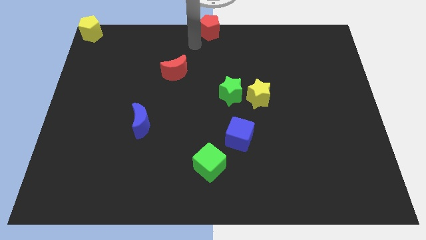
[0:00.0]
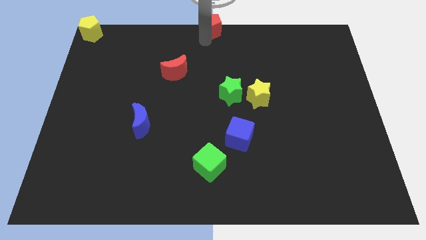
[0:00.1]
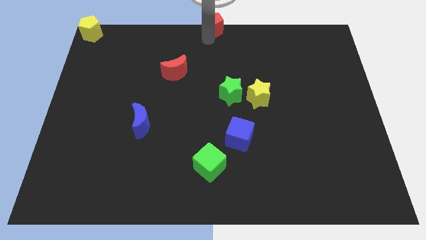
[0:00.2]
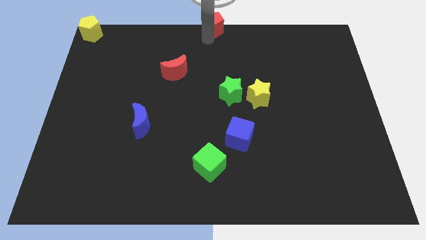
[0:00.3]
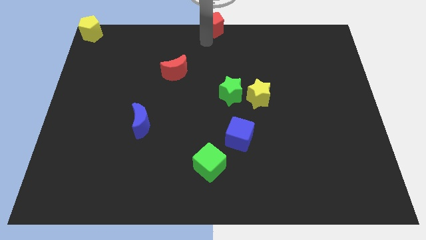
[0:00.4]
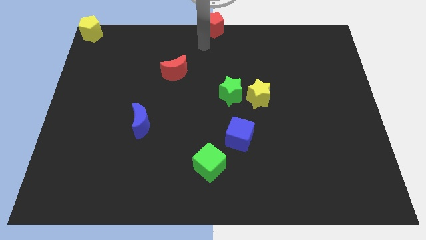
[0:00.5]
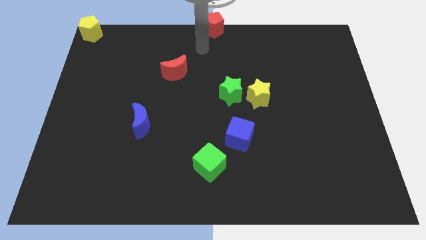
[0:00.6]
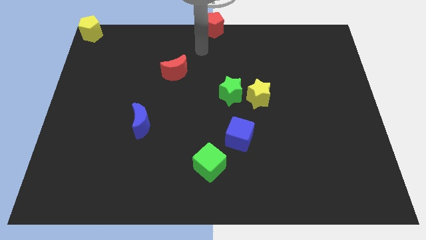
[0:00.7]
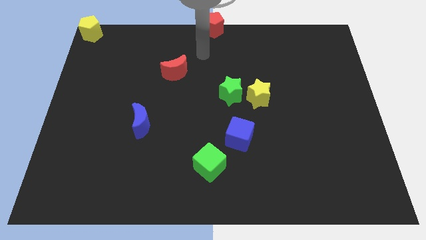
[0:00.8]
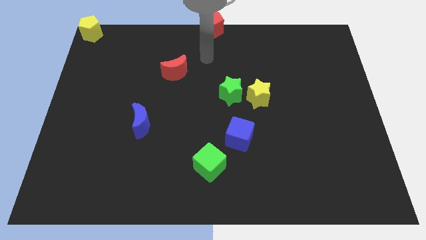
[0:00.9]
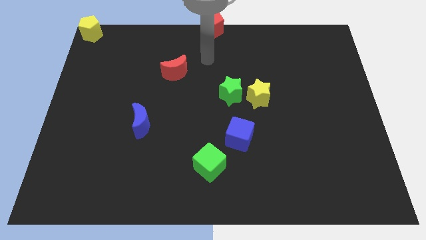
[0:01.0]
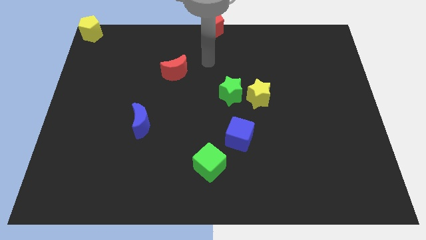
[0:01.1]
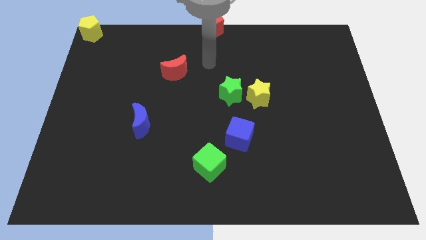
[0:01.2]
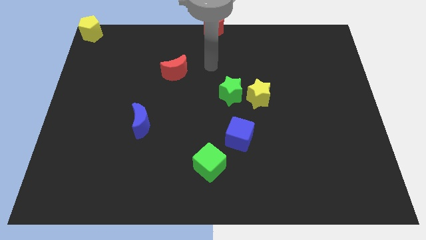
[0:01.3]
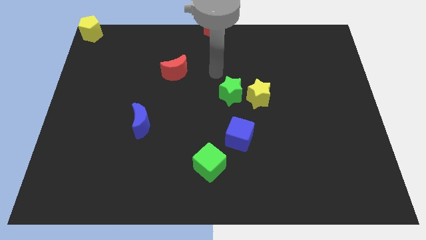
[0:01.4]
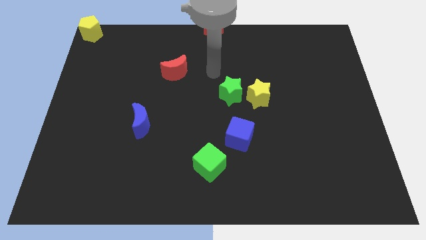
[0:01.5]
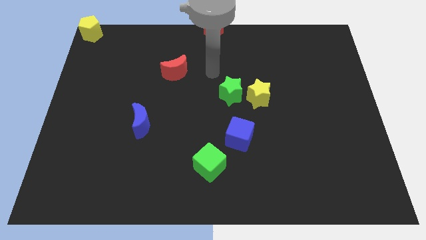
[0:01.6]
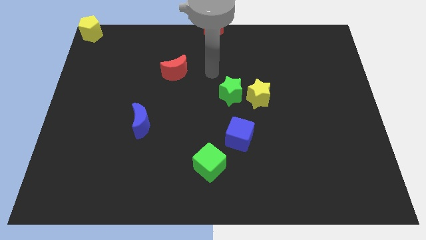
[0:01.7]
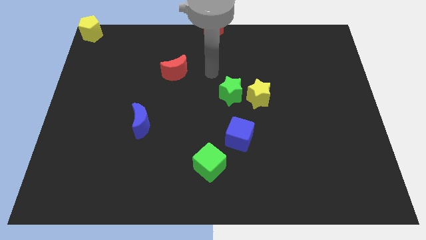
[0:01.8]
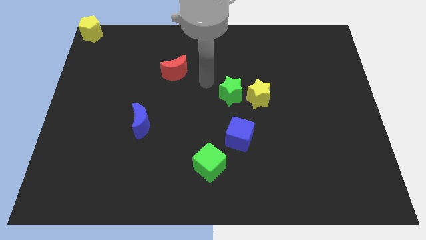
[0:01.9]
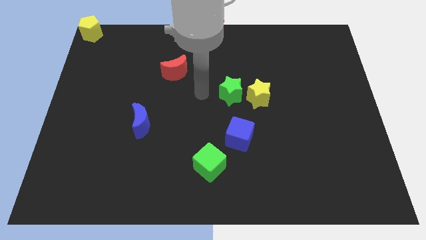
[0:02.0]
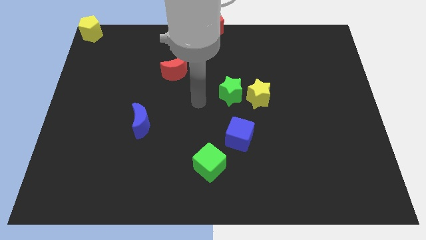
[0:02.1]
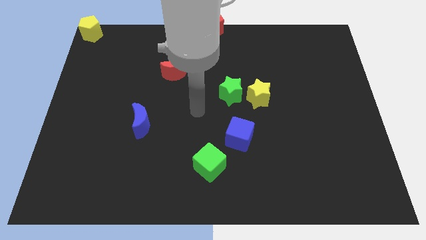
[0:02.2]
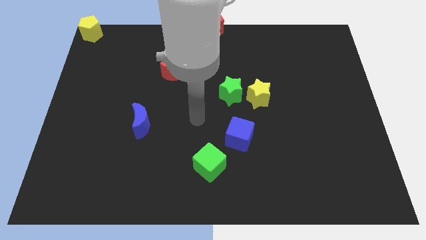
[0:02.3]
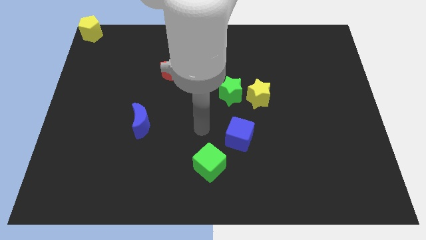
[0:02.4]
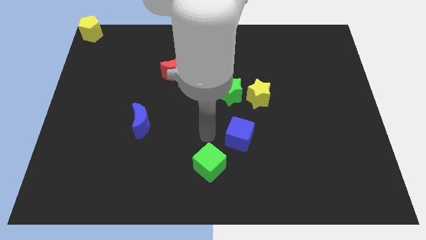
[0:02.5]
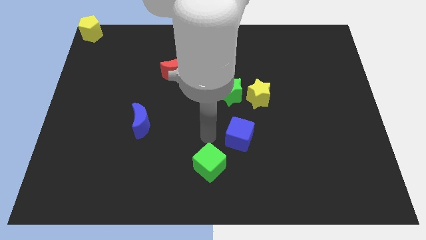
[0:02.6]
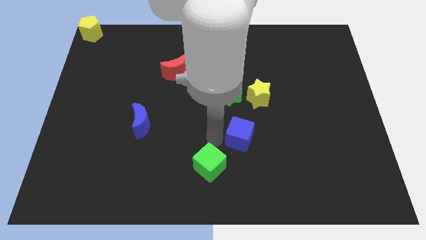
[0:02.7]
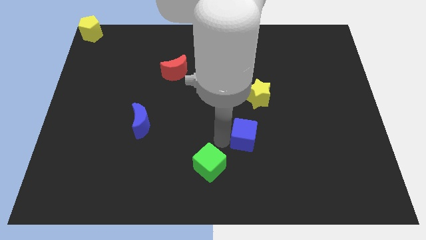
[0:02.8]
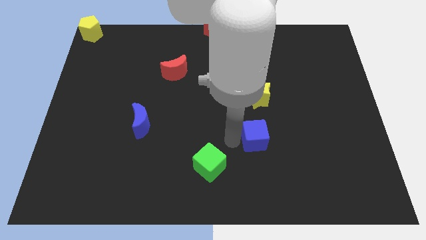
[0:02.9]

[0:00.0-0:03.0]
place blue cube to the bottom of yellow star

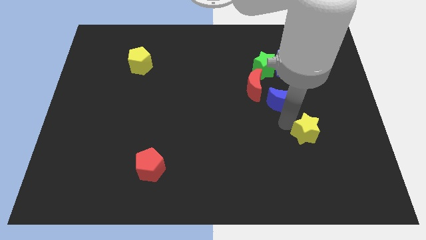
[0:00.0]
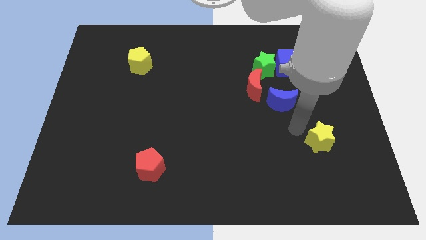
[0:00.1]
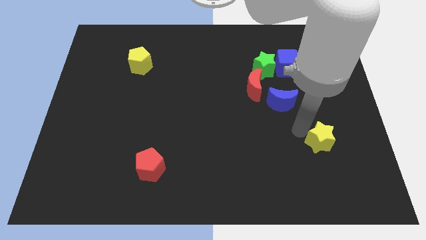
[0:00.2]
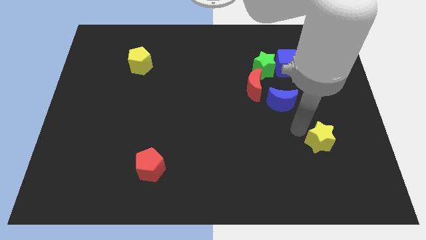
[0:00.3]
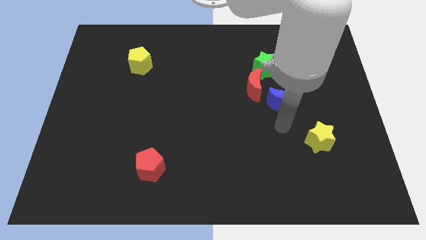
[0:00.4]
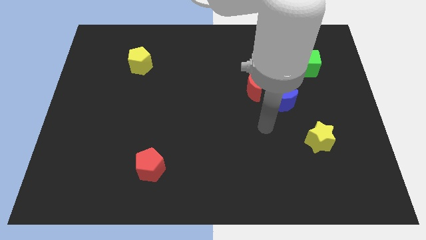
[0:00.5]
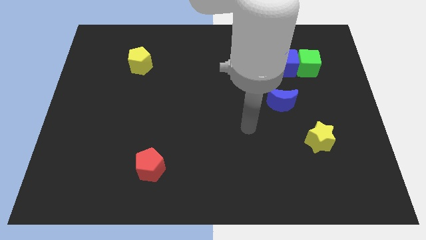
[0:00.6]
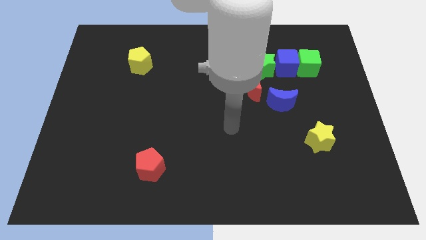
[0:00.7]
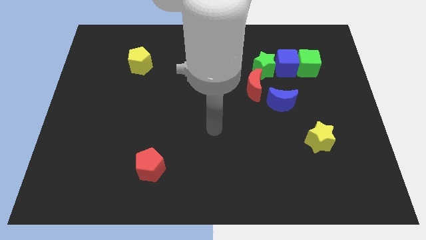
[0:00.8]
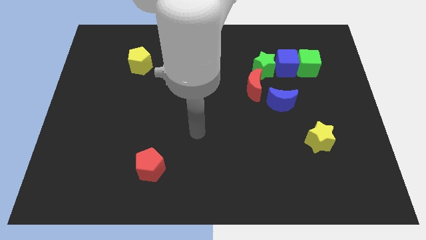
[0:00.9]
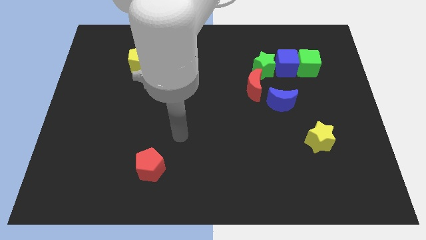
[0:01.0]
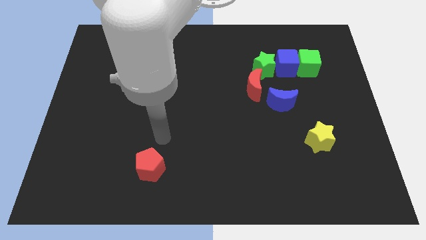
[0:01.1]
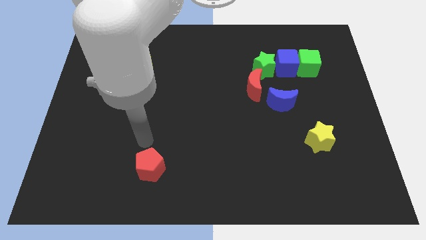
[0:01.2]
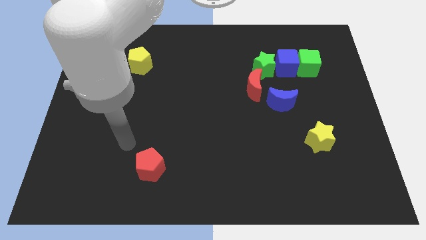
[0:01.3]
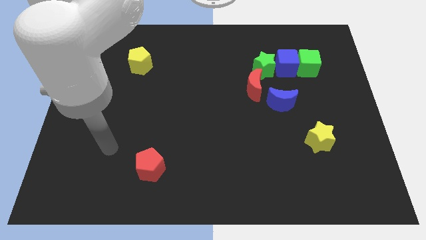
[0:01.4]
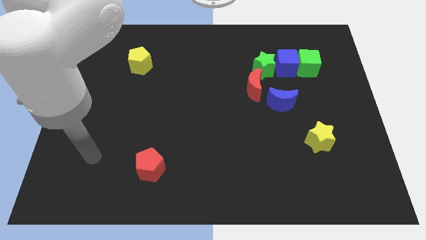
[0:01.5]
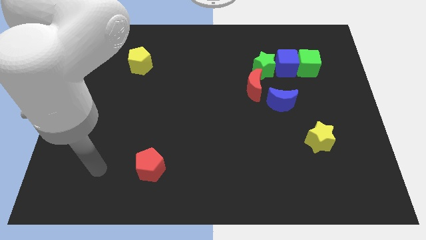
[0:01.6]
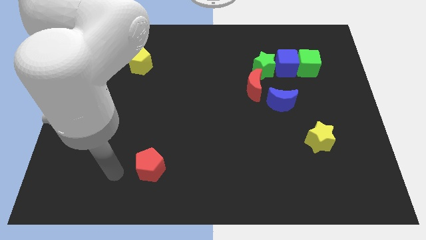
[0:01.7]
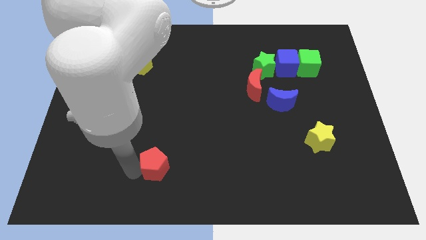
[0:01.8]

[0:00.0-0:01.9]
push your arm to the left of the red pentagon

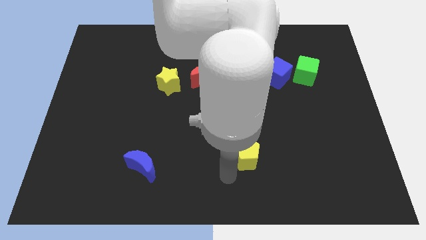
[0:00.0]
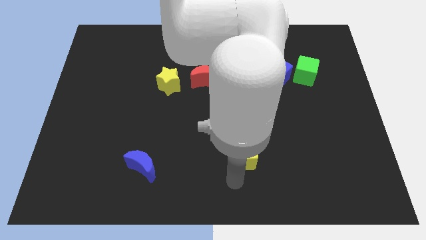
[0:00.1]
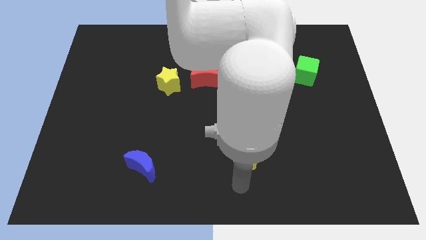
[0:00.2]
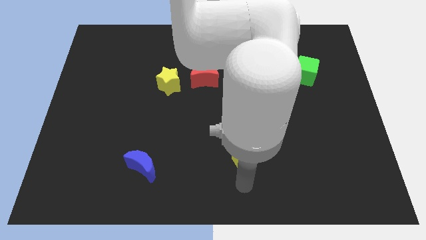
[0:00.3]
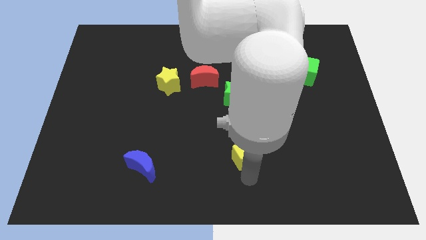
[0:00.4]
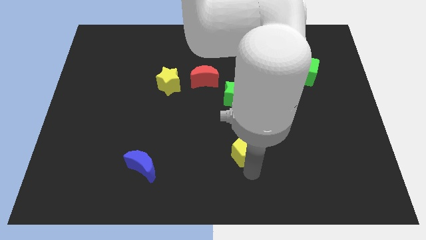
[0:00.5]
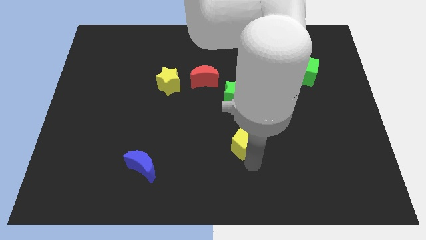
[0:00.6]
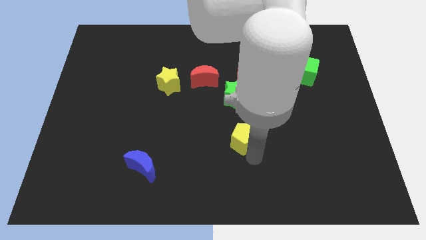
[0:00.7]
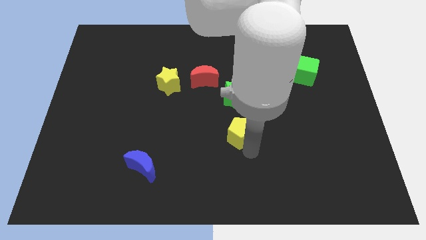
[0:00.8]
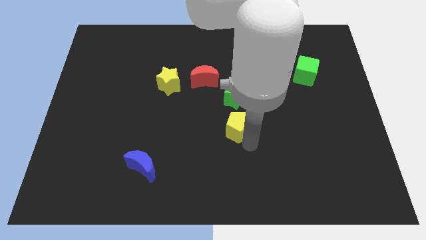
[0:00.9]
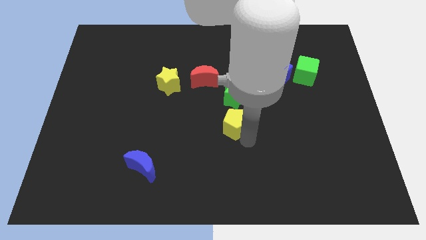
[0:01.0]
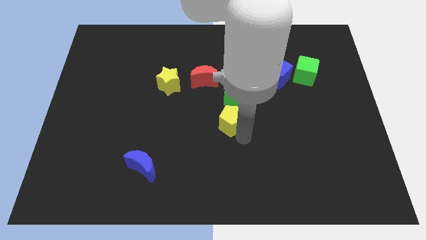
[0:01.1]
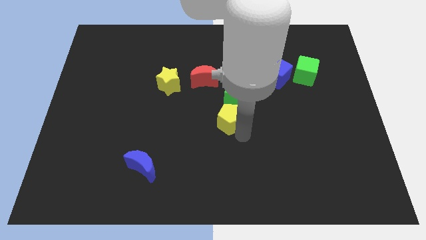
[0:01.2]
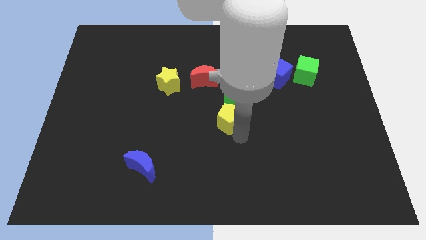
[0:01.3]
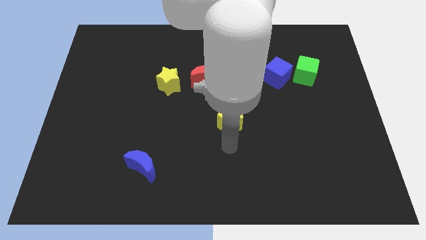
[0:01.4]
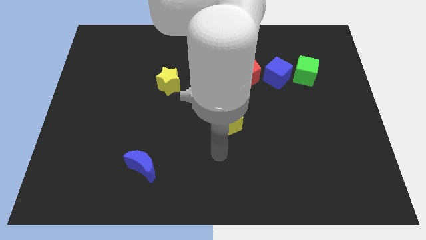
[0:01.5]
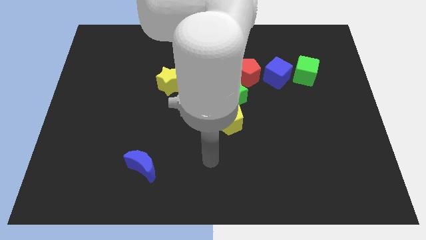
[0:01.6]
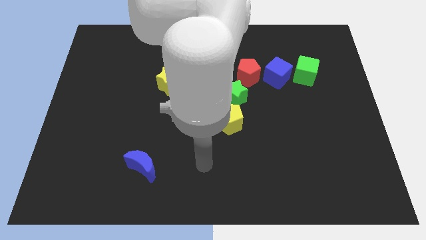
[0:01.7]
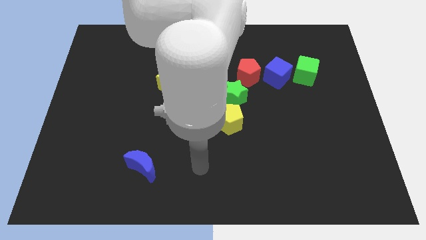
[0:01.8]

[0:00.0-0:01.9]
place the yellow pentagon below the green star

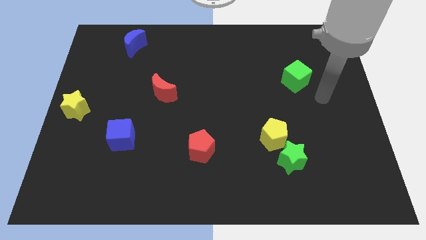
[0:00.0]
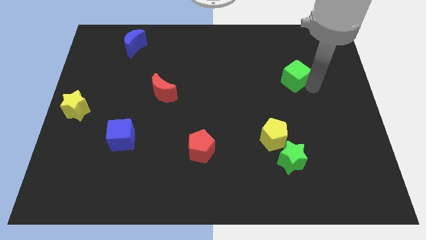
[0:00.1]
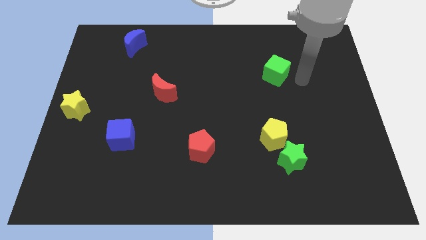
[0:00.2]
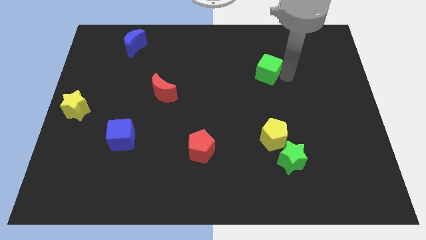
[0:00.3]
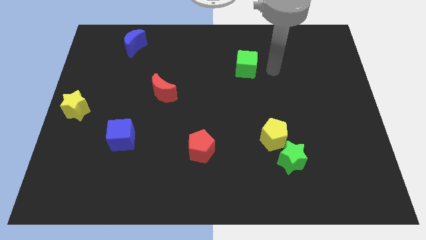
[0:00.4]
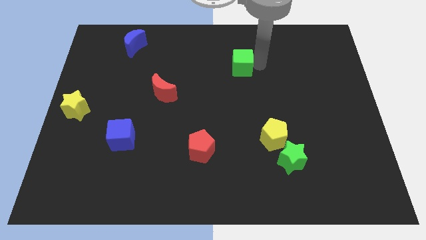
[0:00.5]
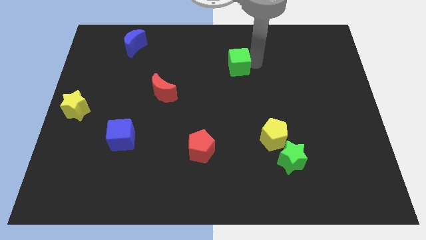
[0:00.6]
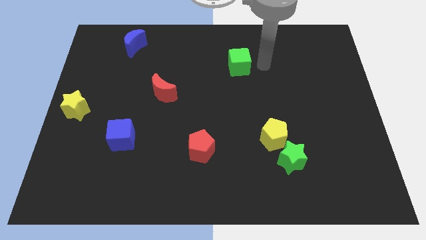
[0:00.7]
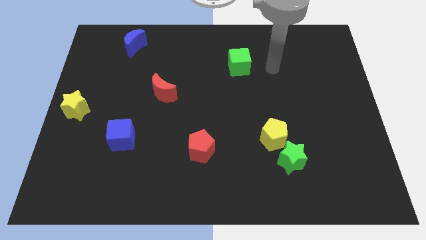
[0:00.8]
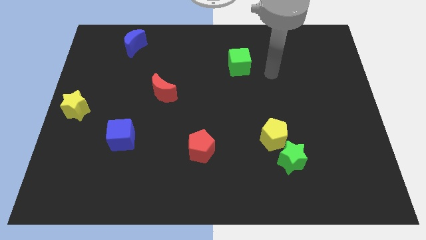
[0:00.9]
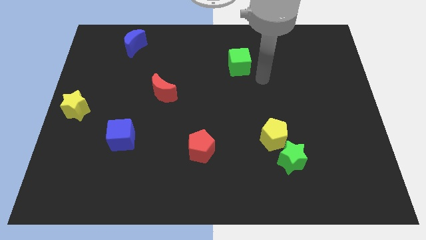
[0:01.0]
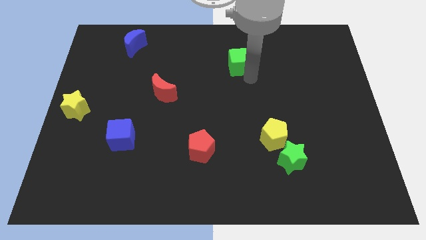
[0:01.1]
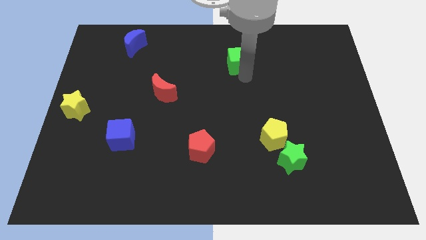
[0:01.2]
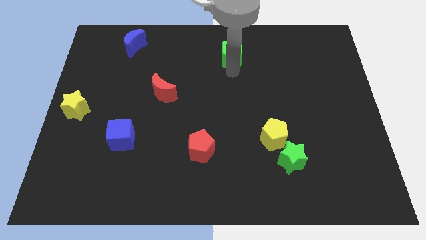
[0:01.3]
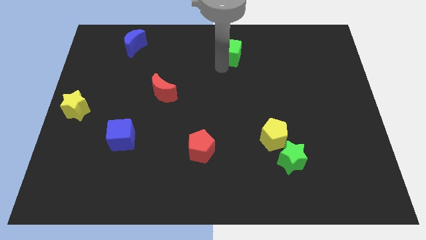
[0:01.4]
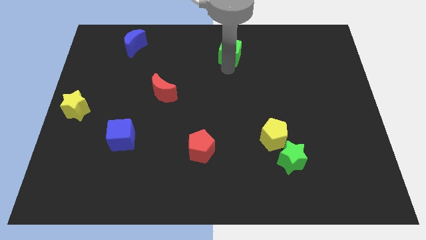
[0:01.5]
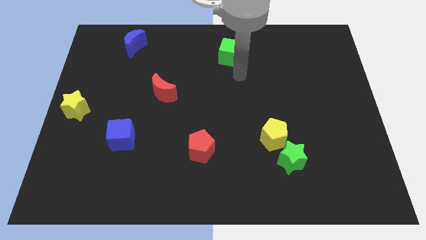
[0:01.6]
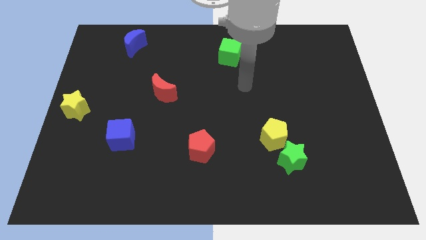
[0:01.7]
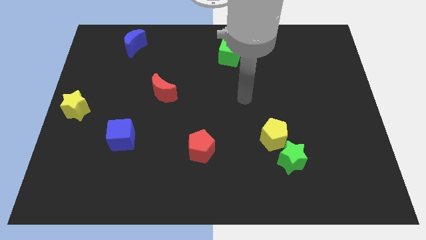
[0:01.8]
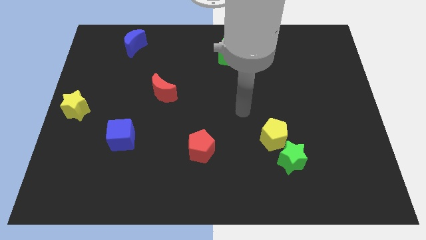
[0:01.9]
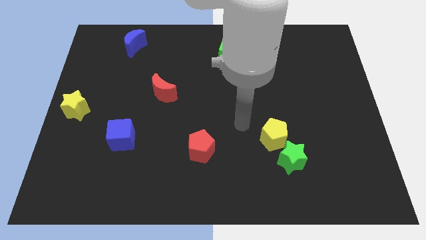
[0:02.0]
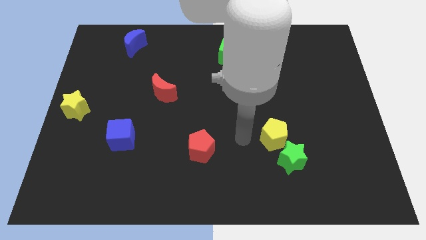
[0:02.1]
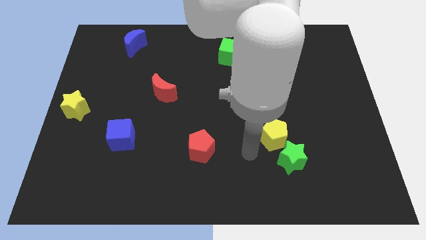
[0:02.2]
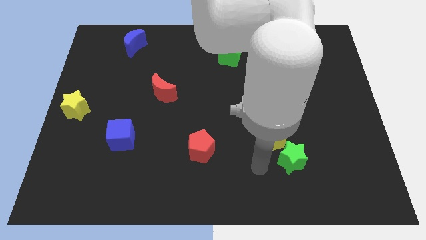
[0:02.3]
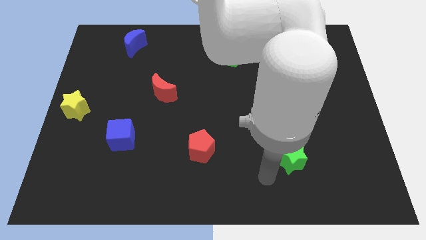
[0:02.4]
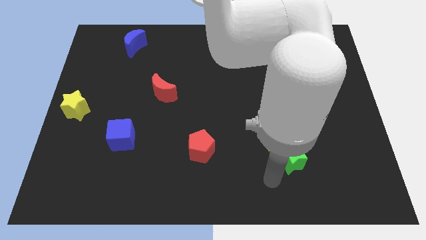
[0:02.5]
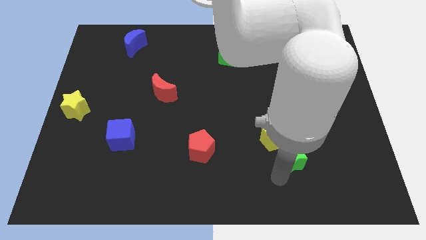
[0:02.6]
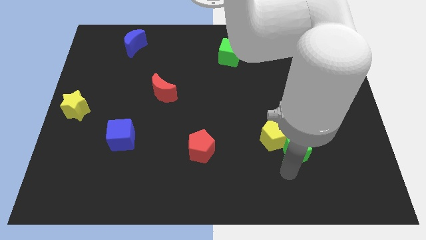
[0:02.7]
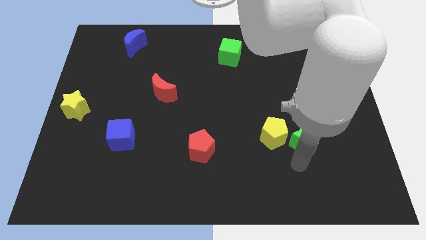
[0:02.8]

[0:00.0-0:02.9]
move the green cube to the left
